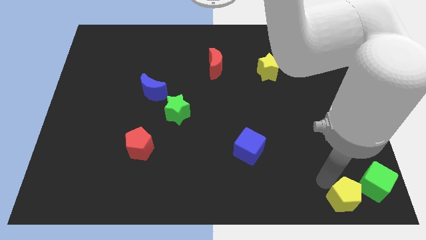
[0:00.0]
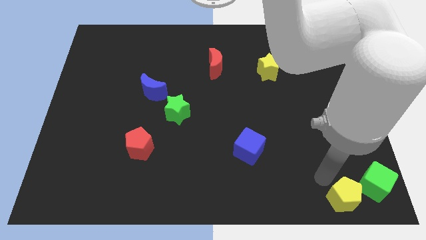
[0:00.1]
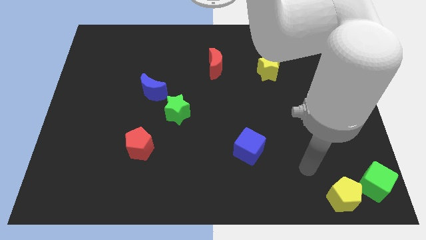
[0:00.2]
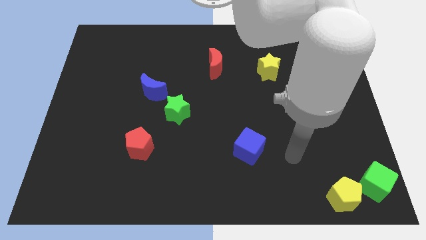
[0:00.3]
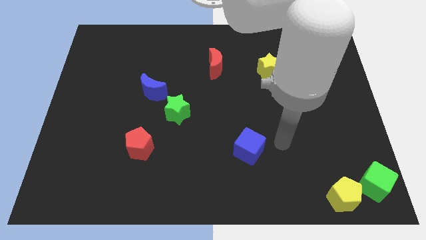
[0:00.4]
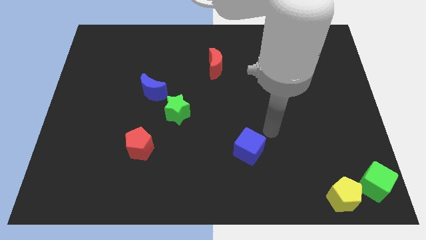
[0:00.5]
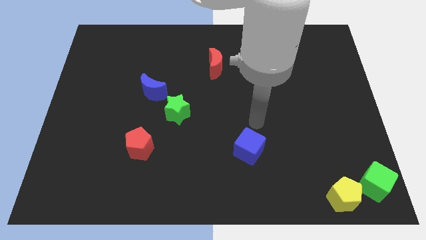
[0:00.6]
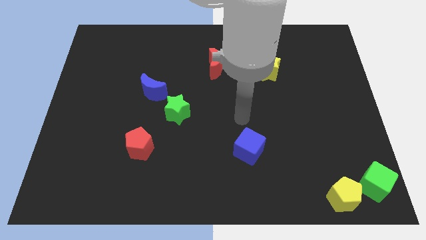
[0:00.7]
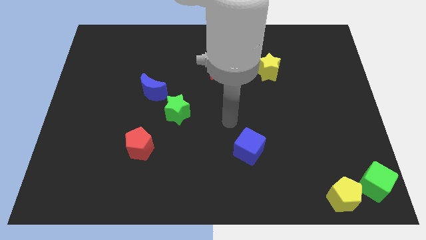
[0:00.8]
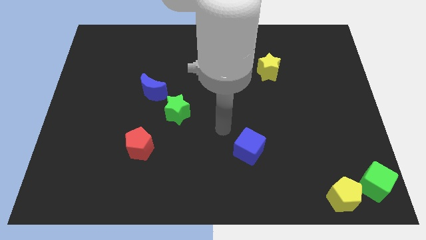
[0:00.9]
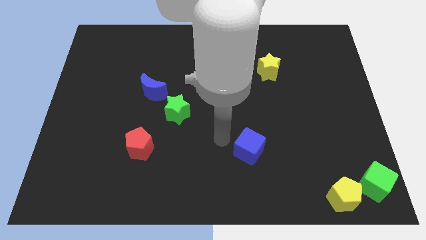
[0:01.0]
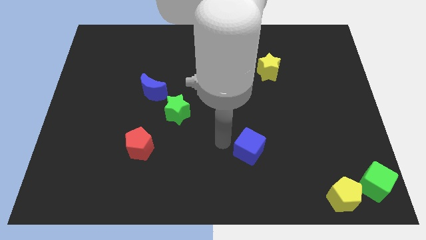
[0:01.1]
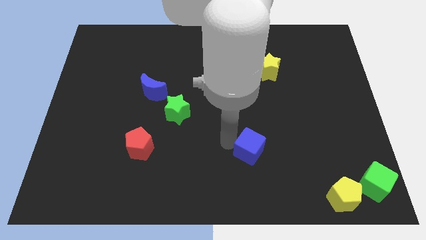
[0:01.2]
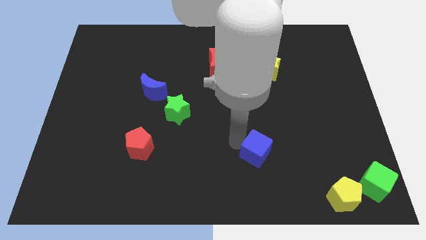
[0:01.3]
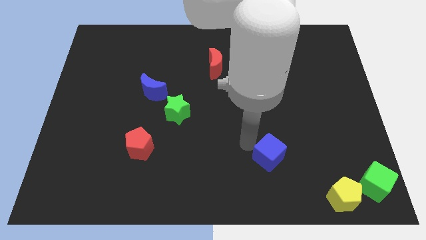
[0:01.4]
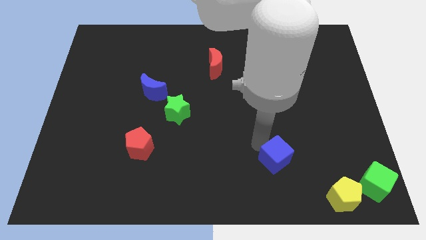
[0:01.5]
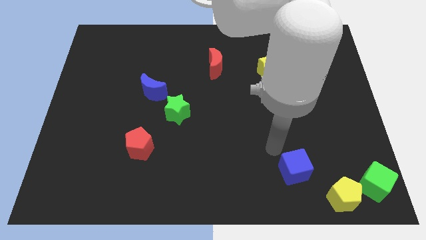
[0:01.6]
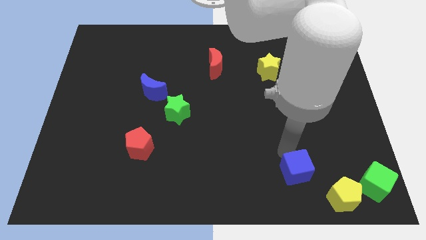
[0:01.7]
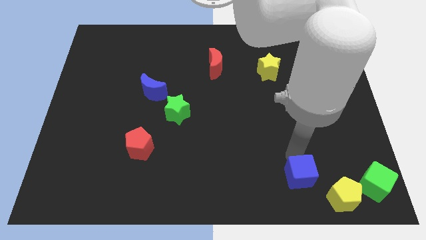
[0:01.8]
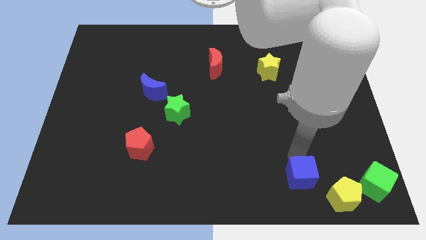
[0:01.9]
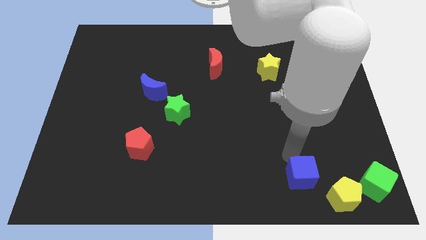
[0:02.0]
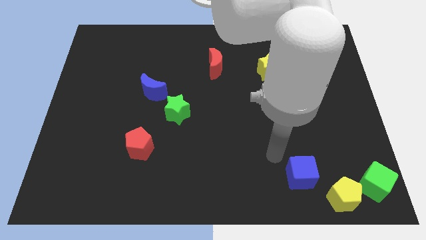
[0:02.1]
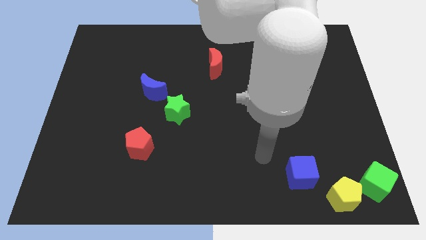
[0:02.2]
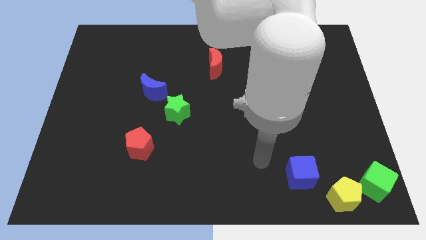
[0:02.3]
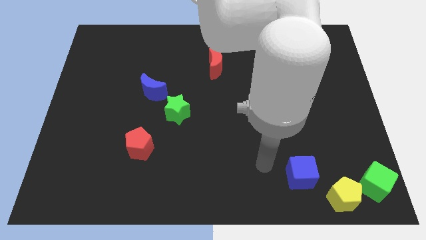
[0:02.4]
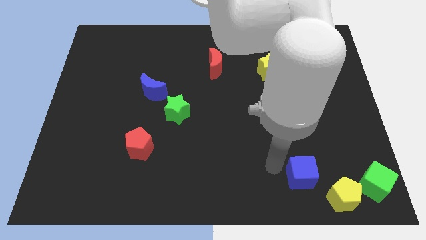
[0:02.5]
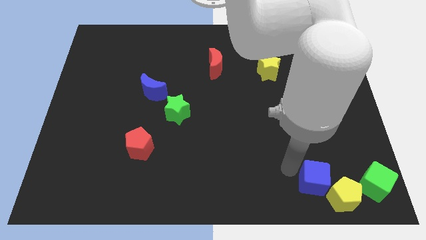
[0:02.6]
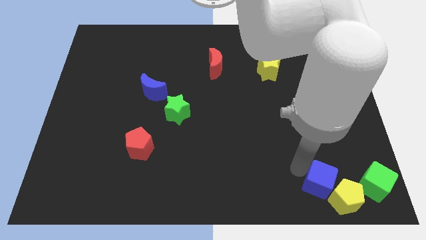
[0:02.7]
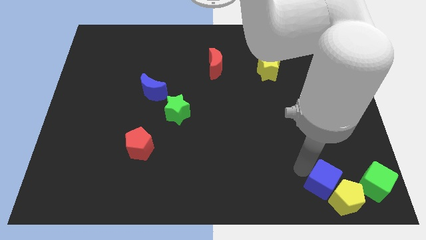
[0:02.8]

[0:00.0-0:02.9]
place blue cube near yellow pentagon

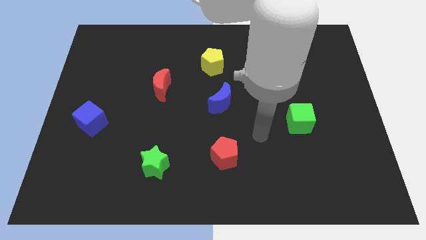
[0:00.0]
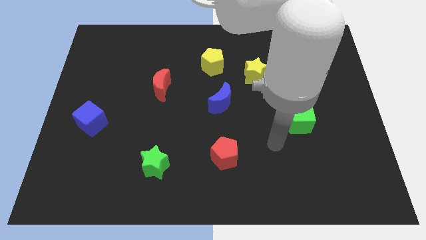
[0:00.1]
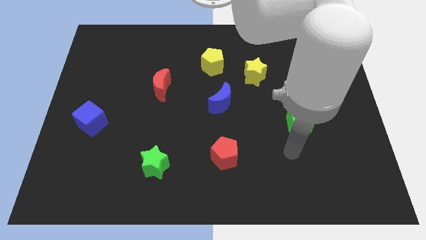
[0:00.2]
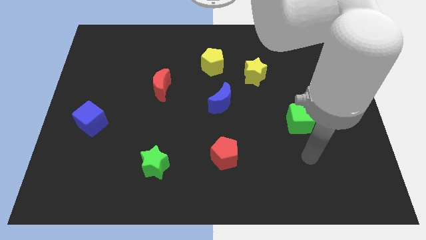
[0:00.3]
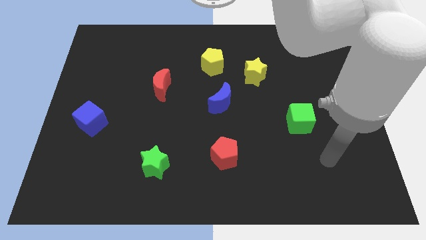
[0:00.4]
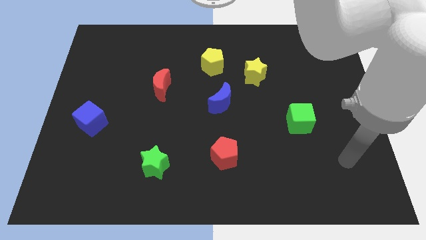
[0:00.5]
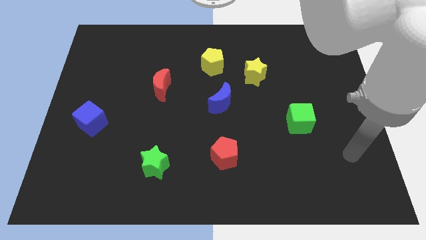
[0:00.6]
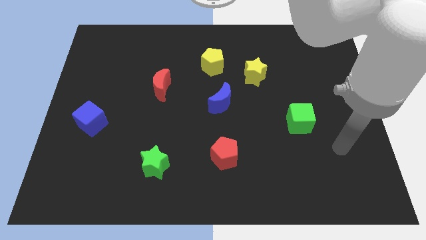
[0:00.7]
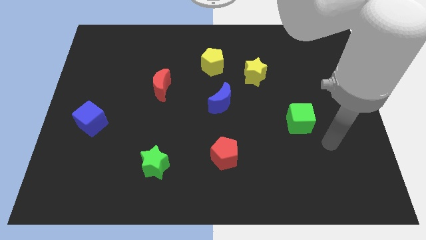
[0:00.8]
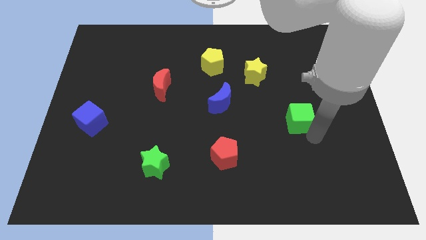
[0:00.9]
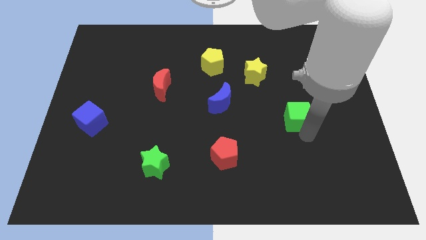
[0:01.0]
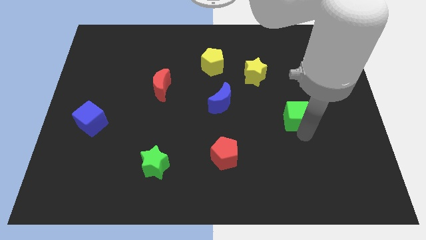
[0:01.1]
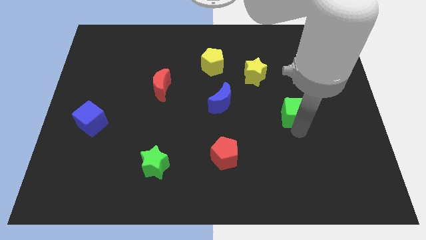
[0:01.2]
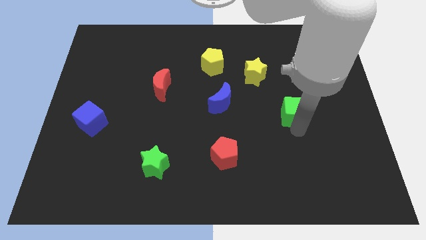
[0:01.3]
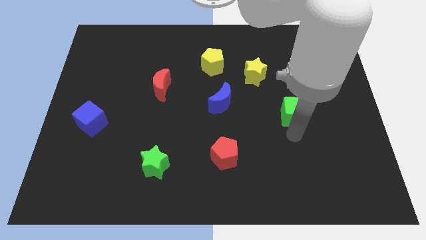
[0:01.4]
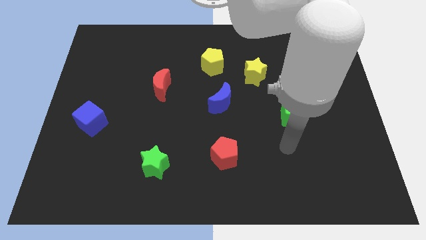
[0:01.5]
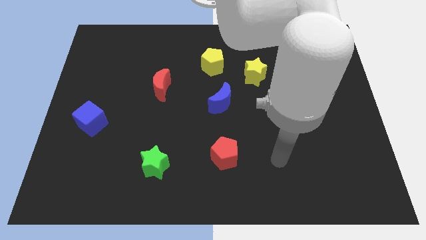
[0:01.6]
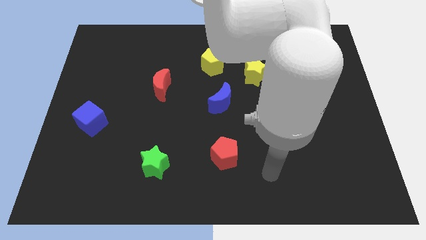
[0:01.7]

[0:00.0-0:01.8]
slightly move the green cube up

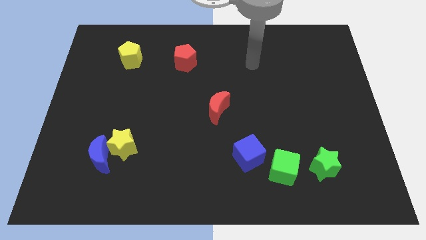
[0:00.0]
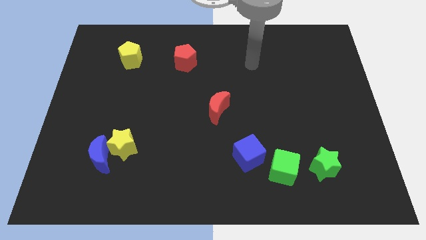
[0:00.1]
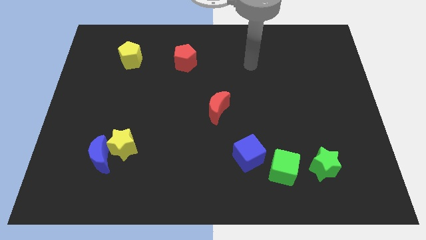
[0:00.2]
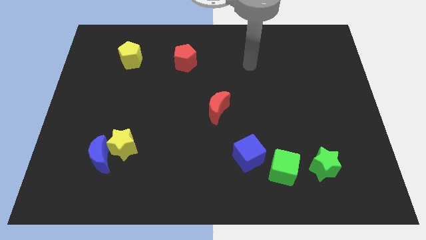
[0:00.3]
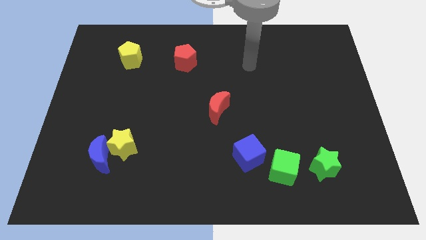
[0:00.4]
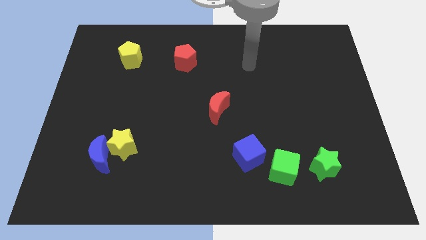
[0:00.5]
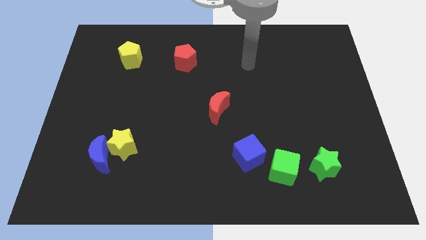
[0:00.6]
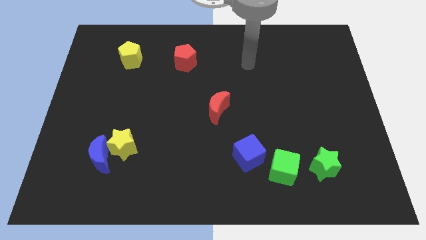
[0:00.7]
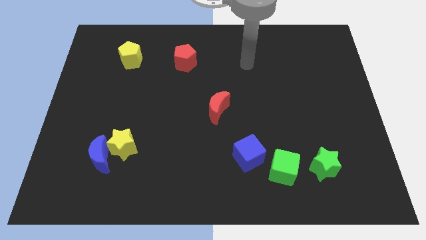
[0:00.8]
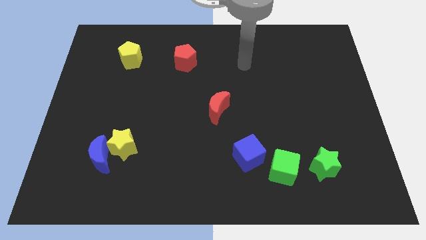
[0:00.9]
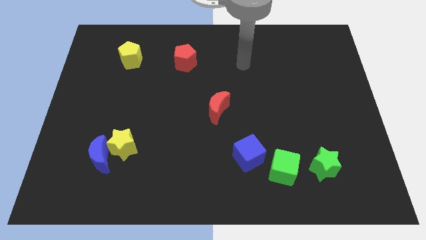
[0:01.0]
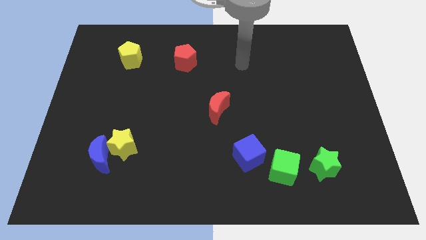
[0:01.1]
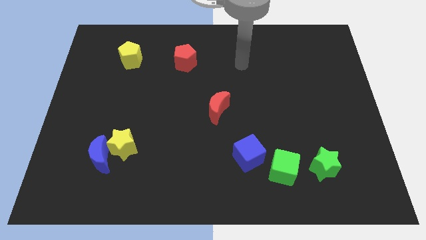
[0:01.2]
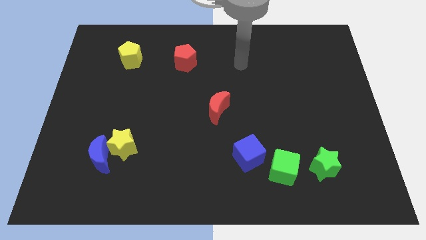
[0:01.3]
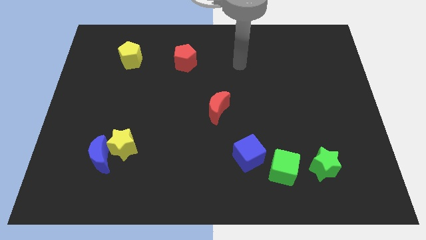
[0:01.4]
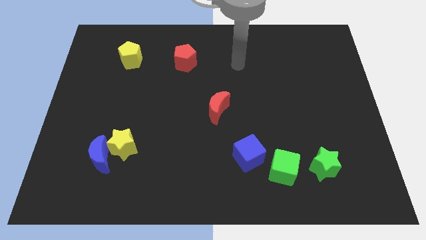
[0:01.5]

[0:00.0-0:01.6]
move your arm slightly to the left side of the board

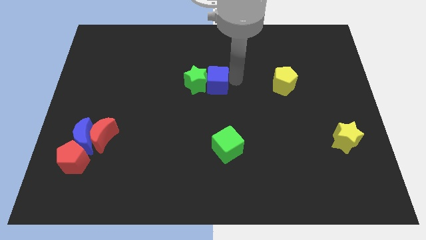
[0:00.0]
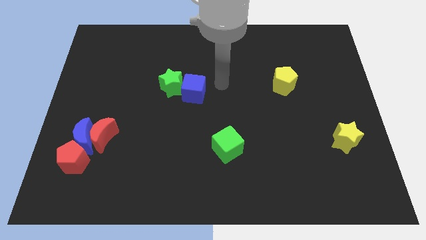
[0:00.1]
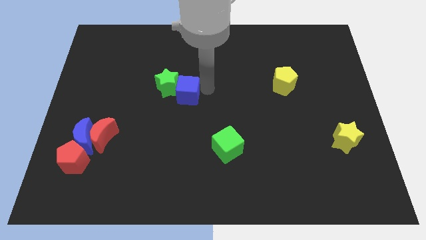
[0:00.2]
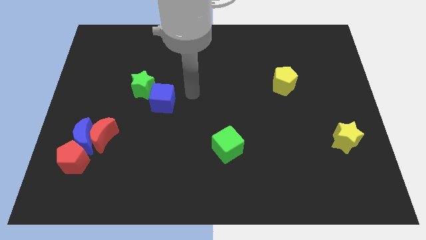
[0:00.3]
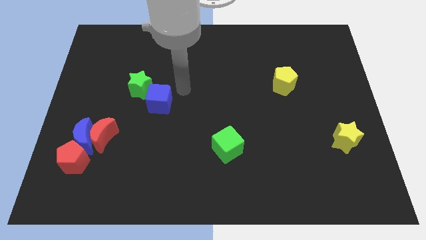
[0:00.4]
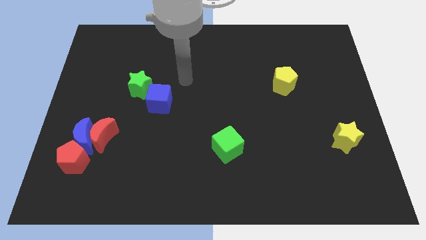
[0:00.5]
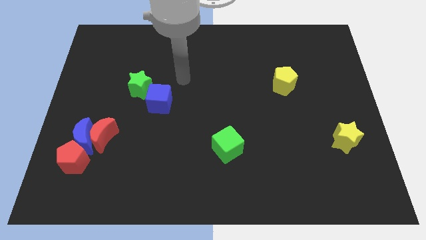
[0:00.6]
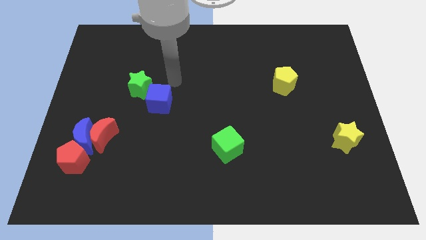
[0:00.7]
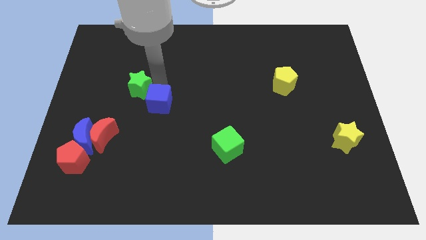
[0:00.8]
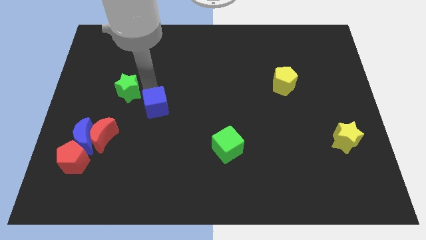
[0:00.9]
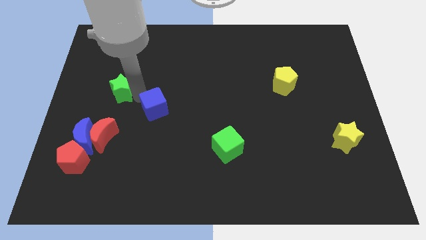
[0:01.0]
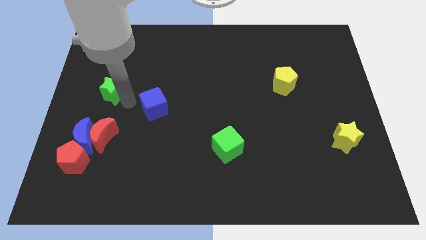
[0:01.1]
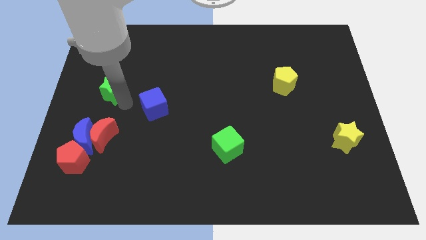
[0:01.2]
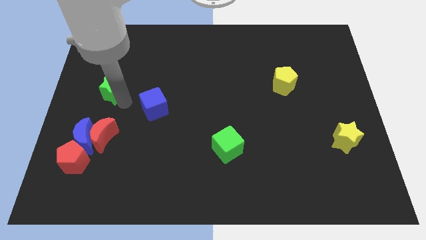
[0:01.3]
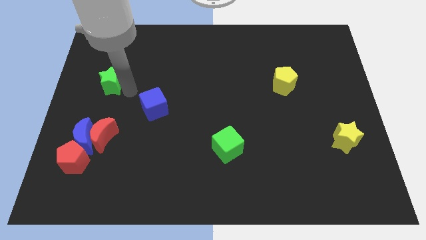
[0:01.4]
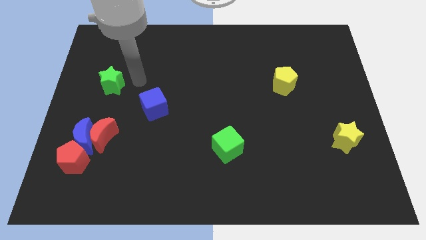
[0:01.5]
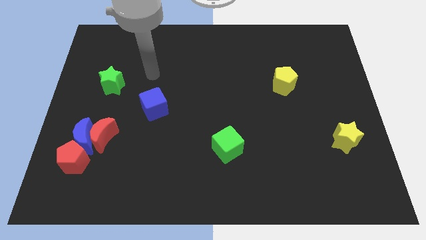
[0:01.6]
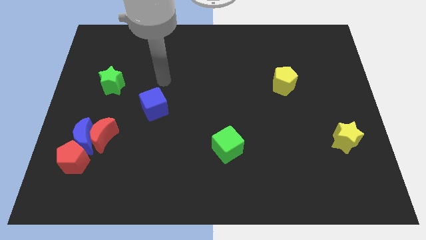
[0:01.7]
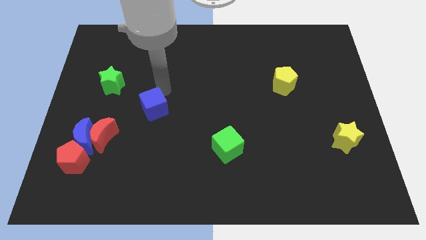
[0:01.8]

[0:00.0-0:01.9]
place the blue cube and green star diagonally on the top left side of the green cube

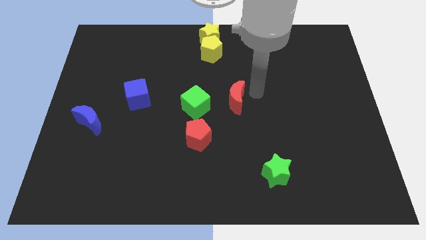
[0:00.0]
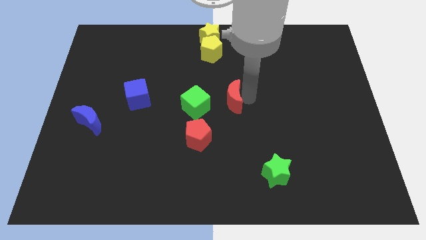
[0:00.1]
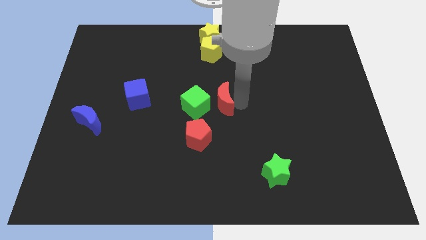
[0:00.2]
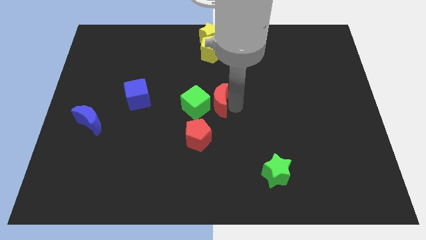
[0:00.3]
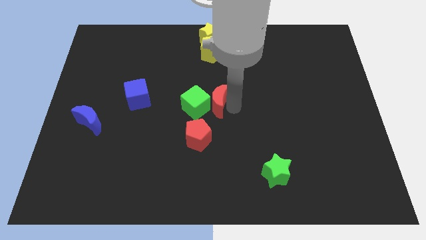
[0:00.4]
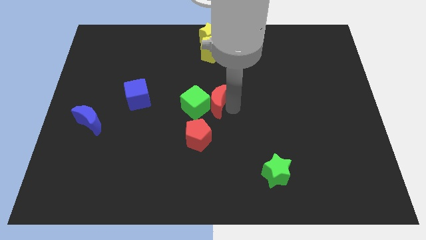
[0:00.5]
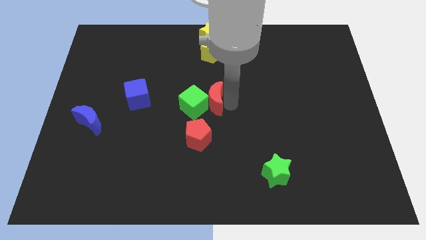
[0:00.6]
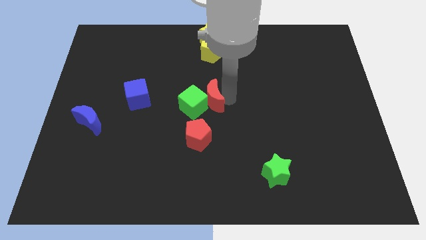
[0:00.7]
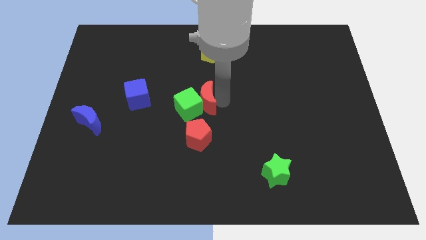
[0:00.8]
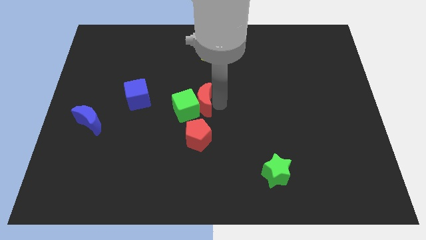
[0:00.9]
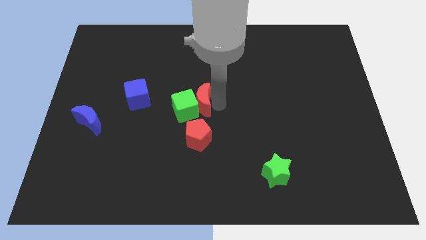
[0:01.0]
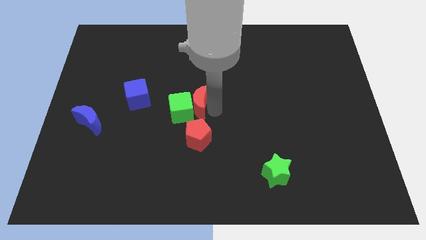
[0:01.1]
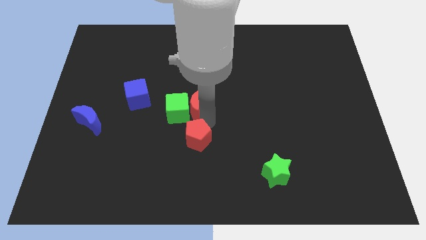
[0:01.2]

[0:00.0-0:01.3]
move the red crescent into the green cube
